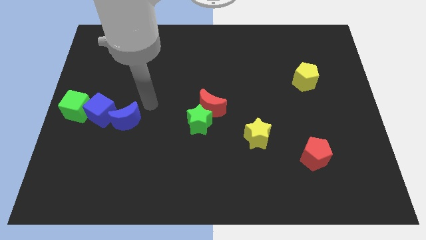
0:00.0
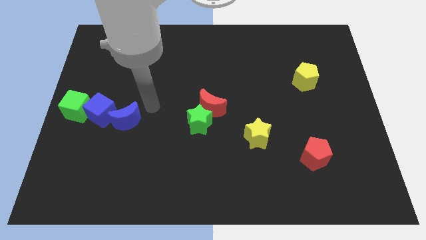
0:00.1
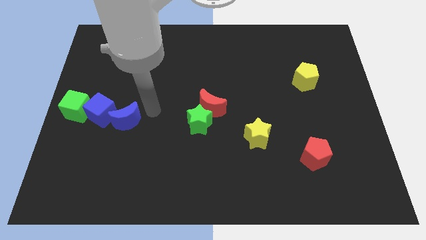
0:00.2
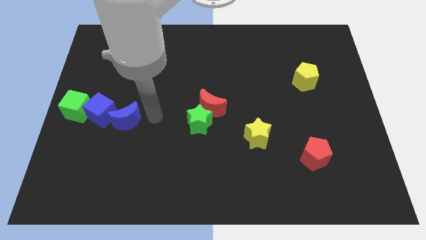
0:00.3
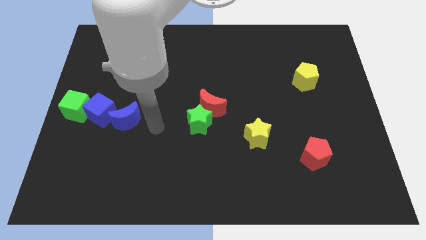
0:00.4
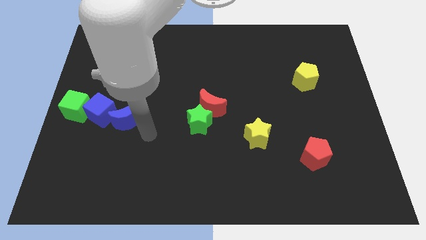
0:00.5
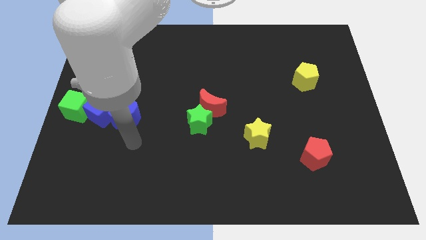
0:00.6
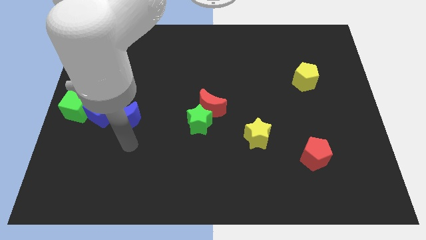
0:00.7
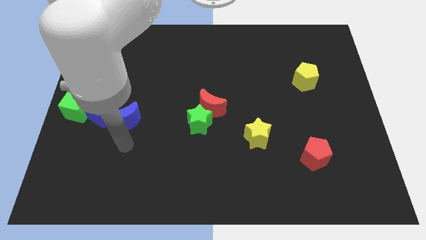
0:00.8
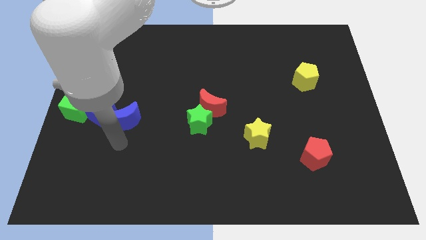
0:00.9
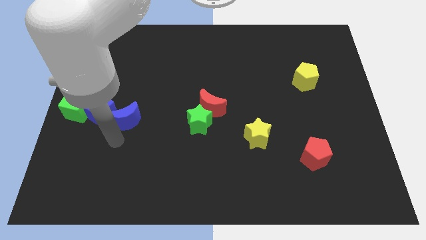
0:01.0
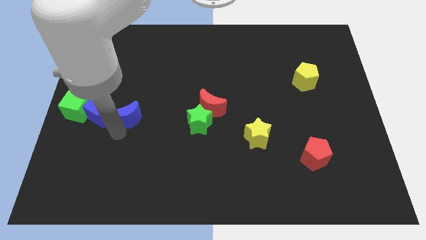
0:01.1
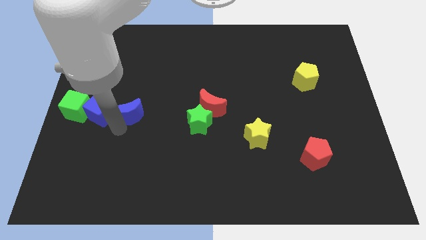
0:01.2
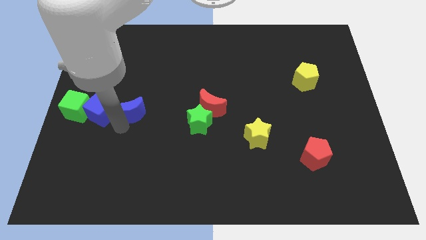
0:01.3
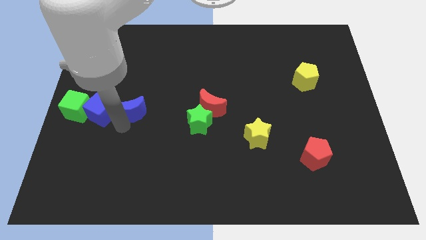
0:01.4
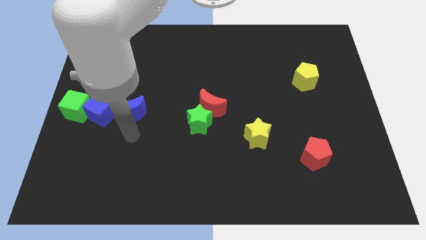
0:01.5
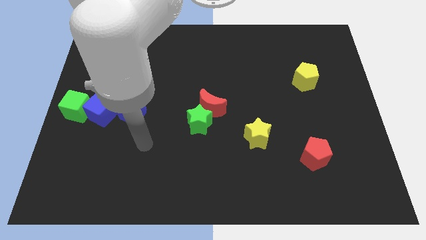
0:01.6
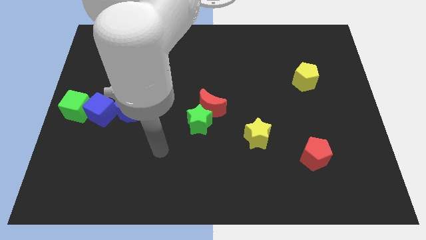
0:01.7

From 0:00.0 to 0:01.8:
adjust blue crescent to the right side of the blue cube to form a horizontal line with blue cube and green cube

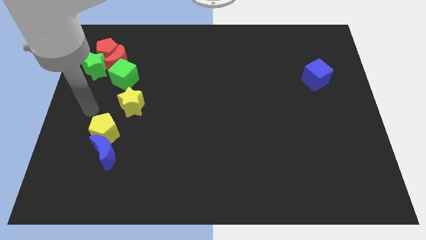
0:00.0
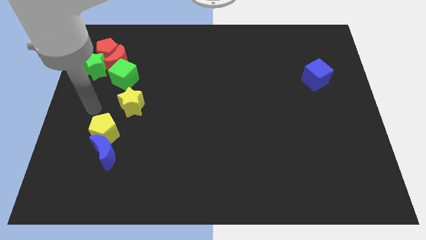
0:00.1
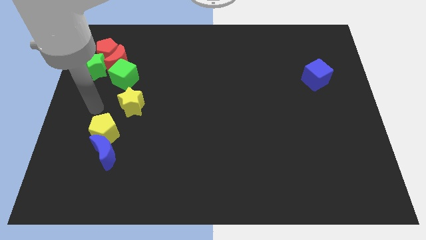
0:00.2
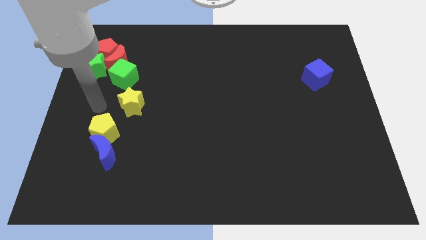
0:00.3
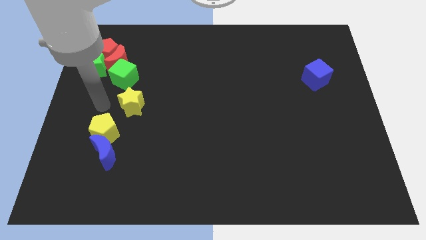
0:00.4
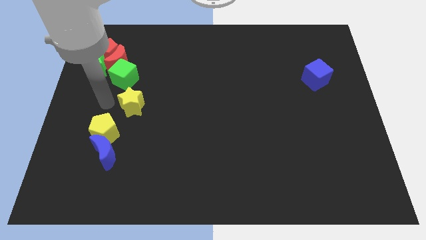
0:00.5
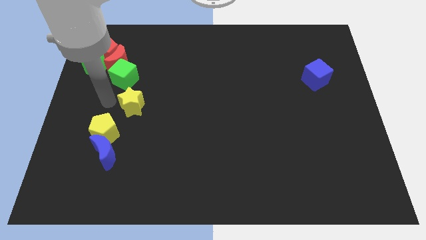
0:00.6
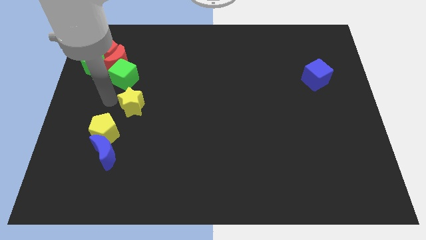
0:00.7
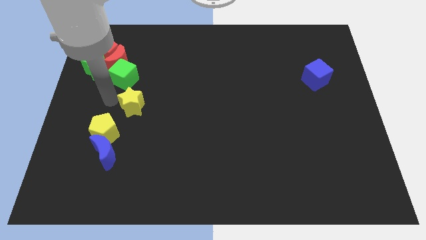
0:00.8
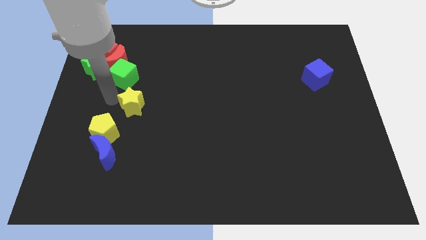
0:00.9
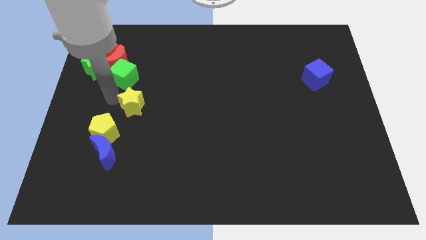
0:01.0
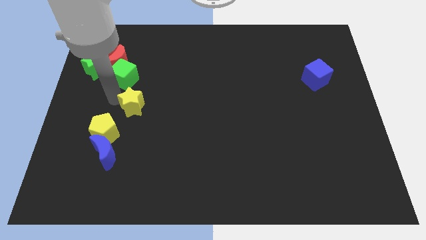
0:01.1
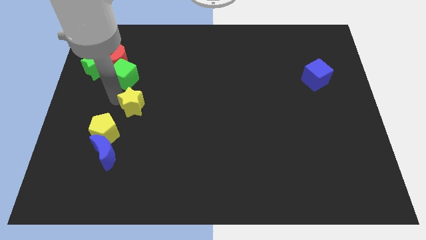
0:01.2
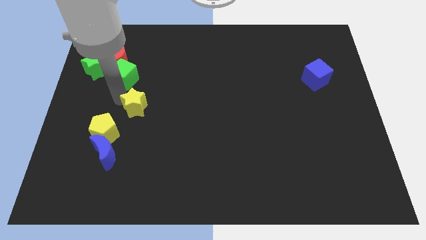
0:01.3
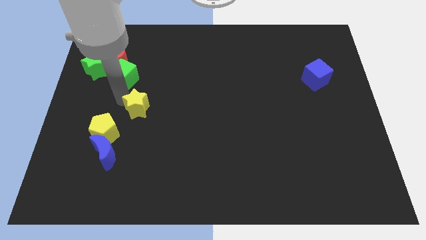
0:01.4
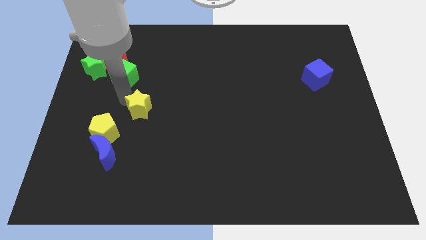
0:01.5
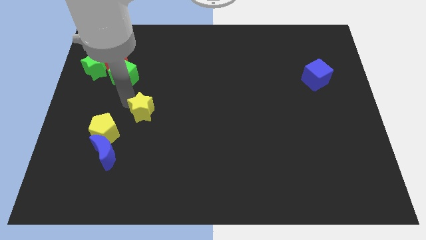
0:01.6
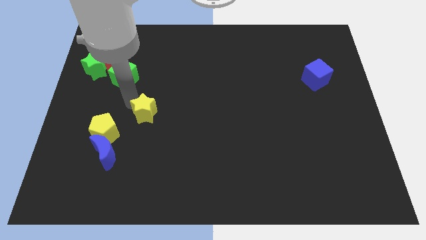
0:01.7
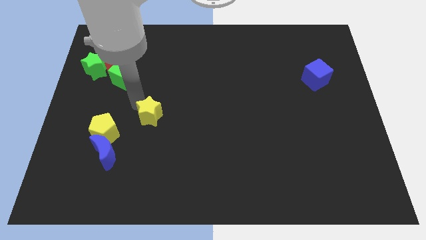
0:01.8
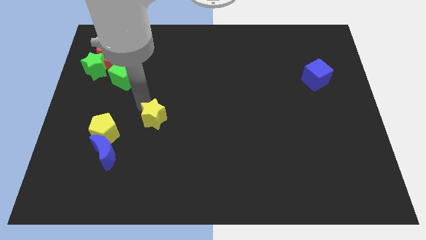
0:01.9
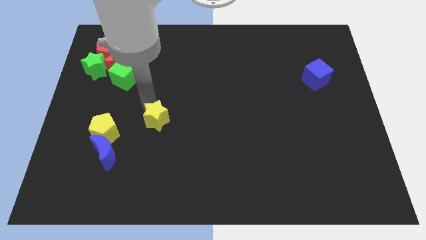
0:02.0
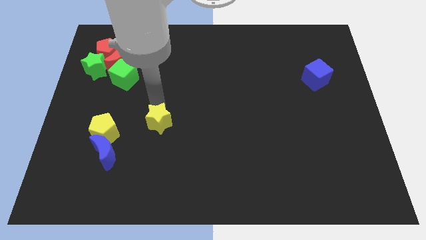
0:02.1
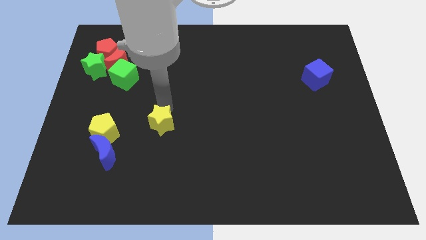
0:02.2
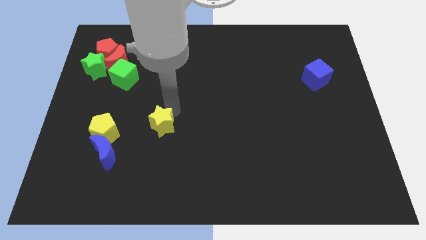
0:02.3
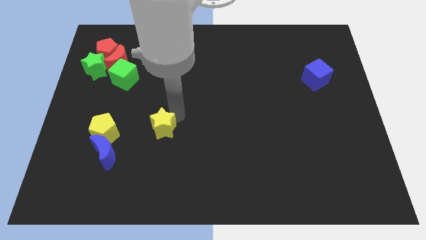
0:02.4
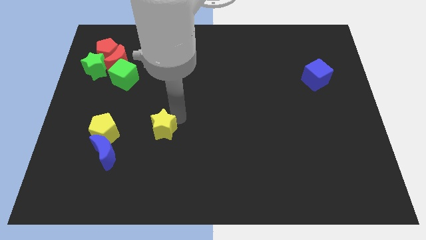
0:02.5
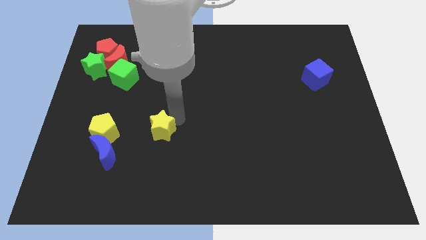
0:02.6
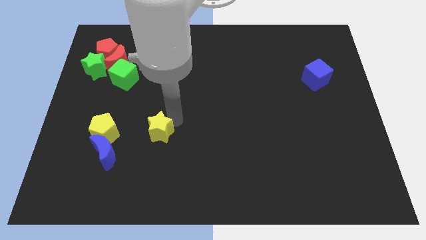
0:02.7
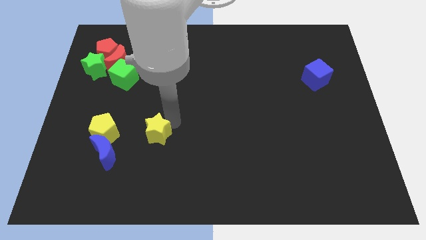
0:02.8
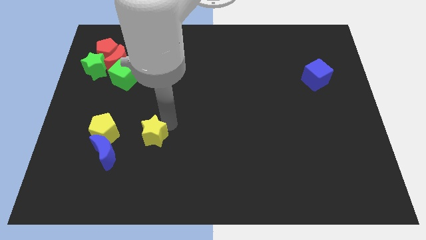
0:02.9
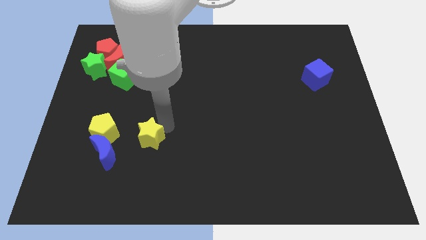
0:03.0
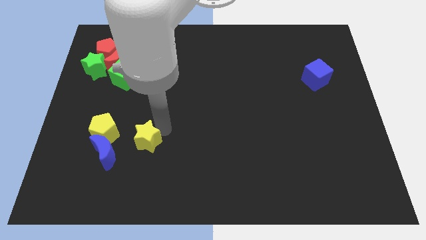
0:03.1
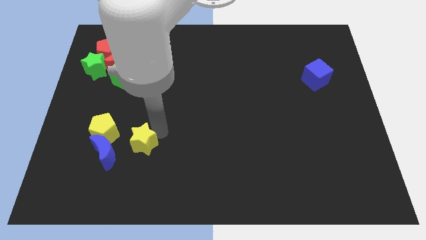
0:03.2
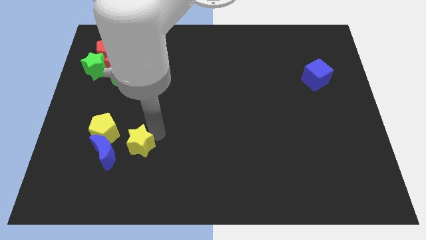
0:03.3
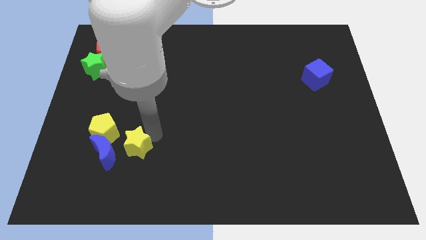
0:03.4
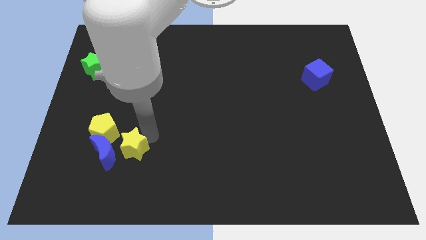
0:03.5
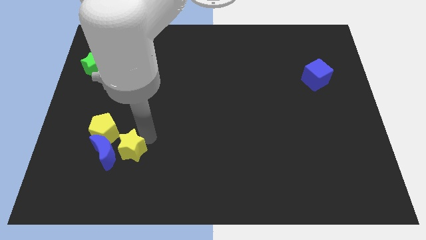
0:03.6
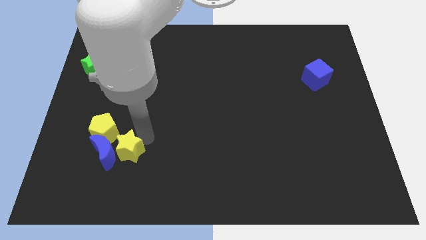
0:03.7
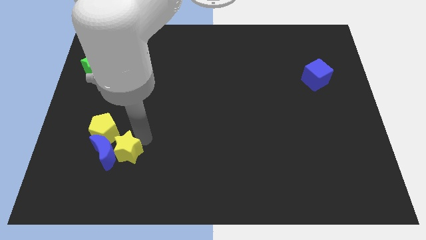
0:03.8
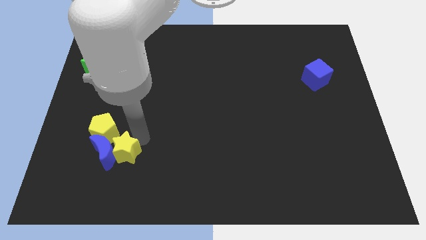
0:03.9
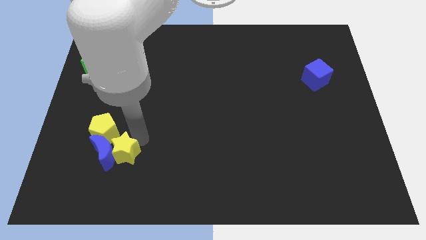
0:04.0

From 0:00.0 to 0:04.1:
push the yellow star towards the blue crescent

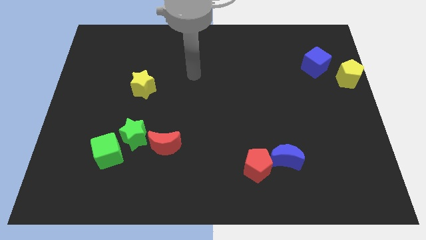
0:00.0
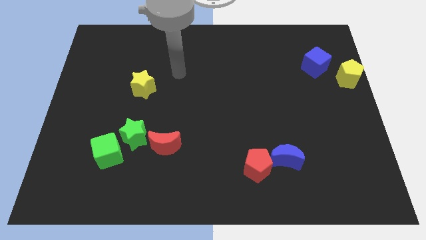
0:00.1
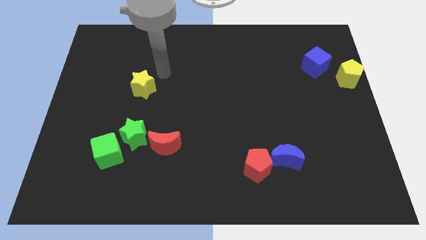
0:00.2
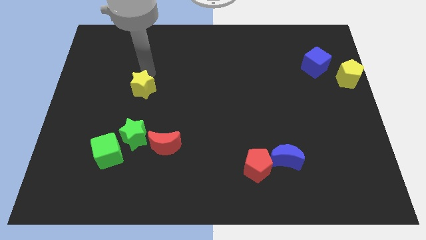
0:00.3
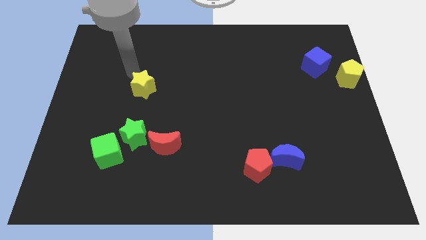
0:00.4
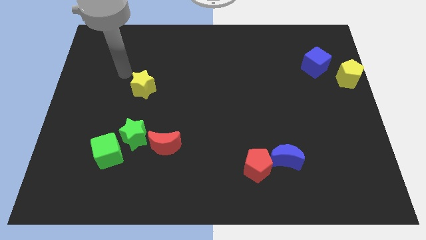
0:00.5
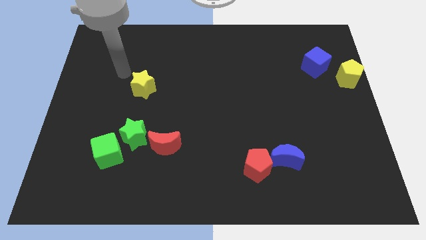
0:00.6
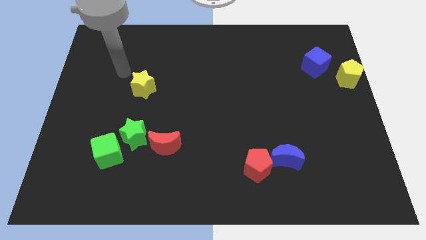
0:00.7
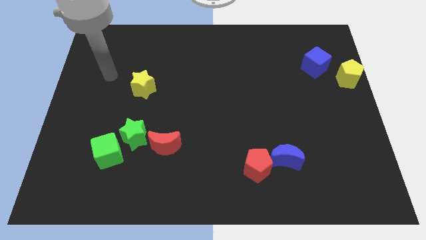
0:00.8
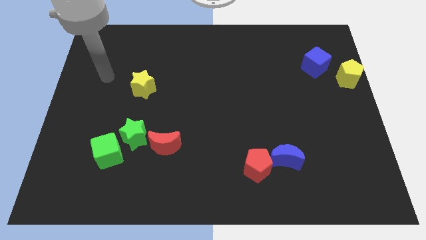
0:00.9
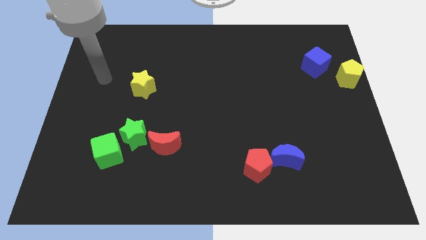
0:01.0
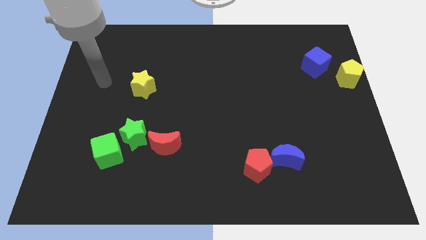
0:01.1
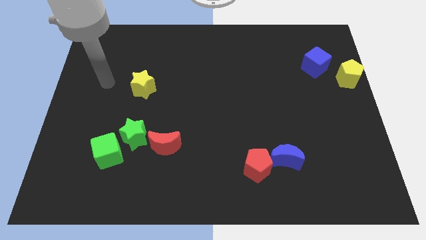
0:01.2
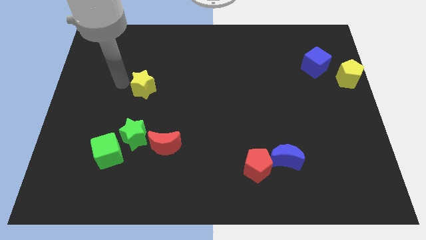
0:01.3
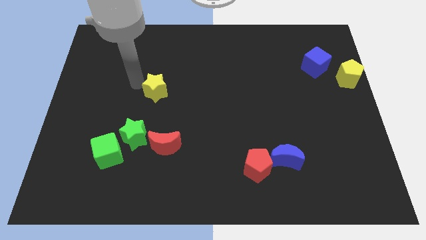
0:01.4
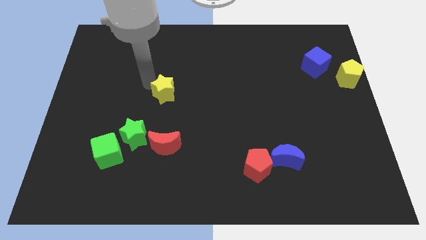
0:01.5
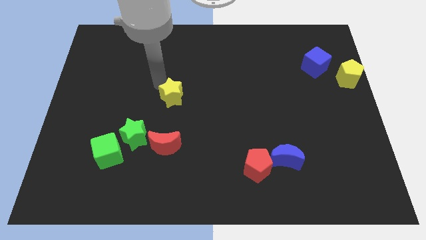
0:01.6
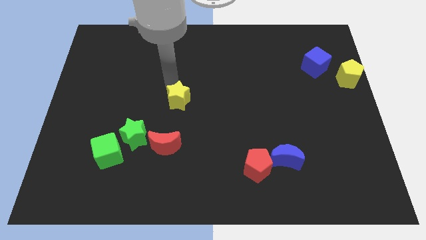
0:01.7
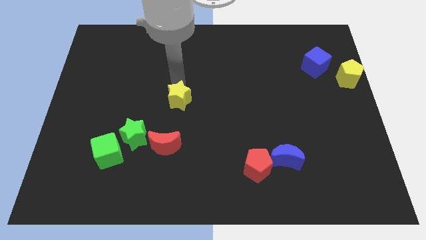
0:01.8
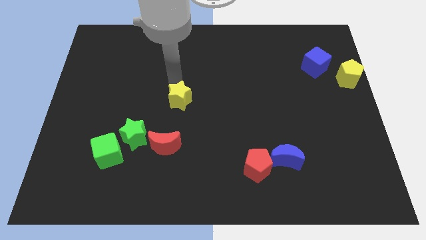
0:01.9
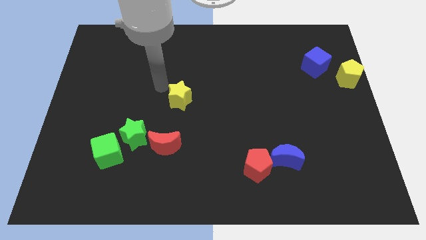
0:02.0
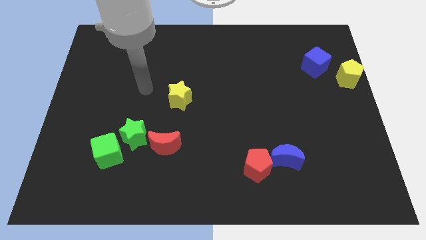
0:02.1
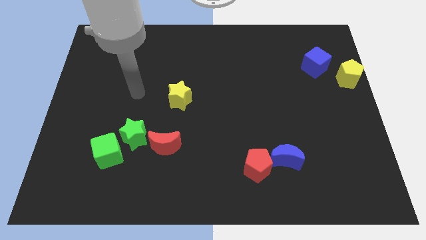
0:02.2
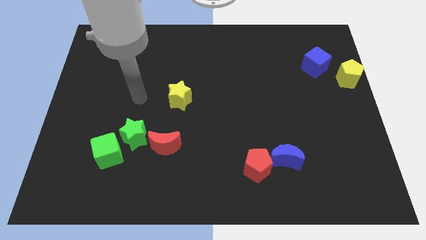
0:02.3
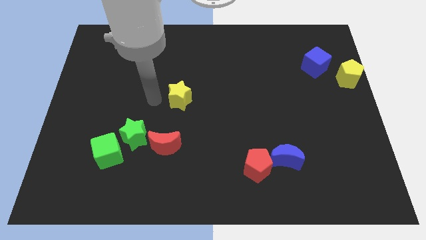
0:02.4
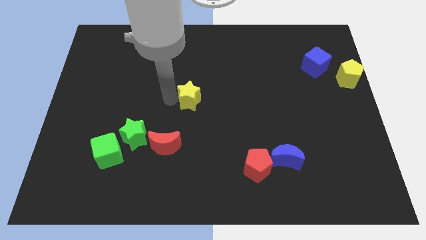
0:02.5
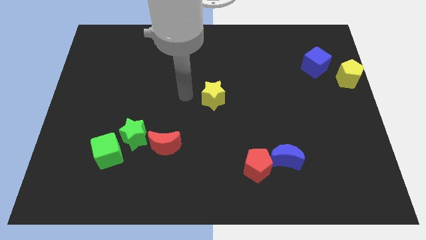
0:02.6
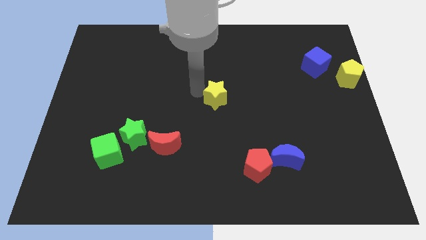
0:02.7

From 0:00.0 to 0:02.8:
push yellow star at center

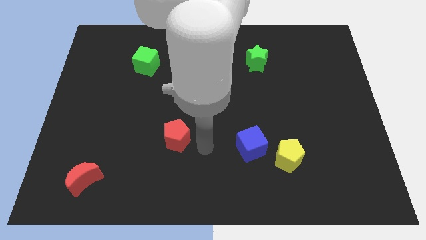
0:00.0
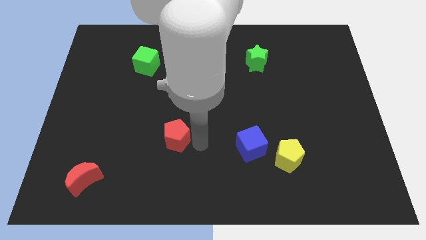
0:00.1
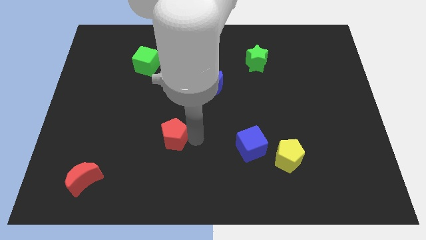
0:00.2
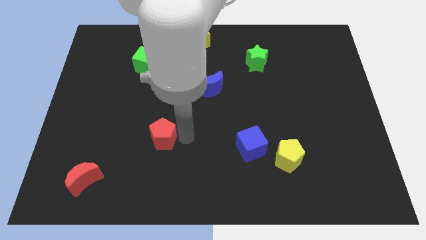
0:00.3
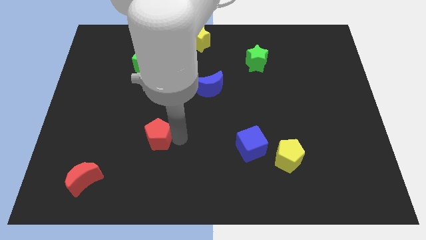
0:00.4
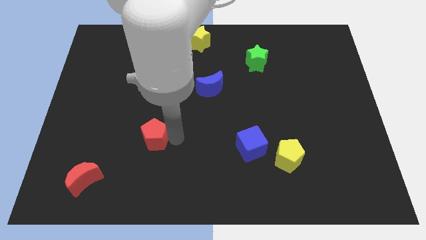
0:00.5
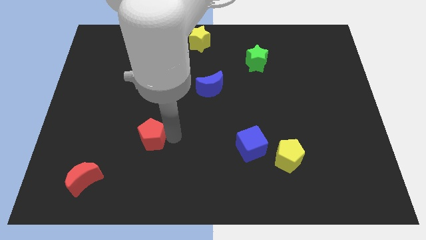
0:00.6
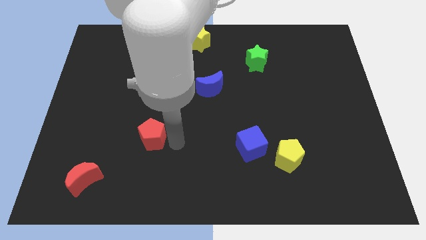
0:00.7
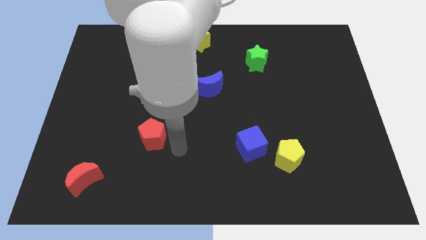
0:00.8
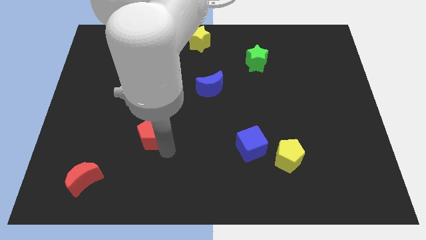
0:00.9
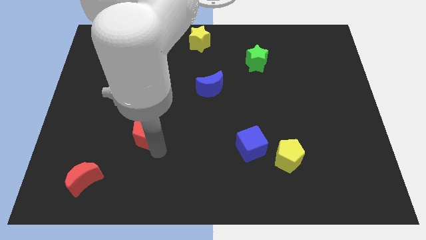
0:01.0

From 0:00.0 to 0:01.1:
place red pentagon diagonal to red moon
